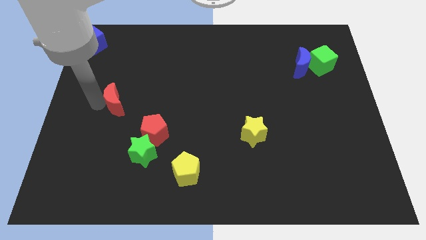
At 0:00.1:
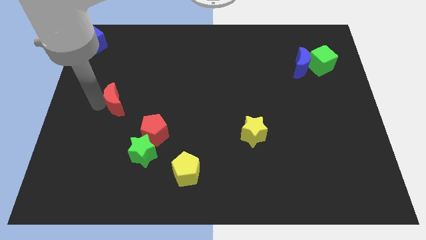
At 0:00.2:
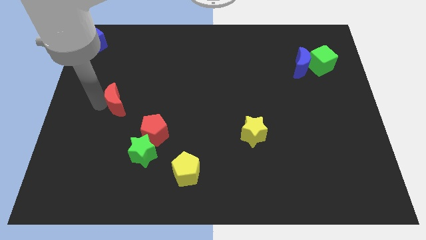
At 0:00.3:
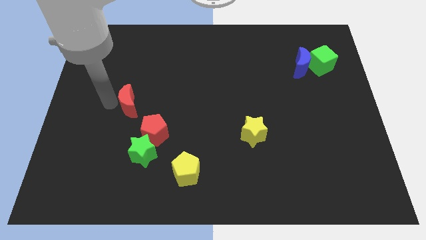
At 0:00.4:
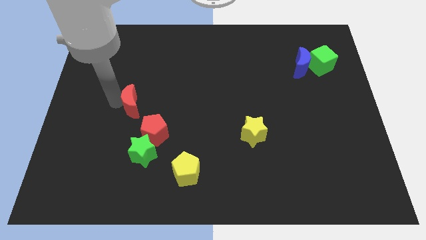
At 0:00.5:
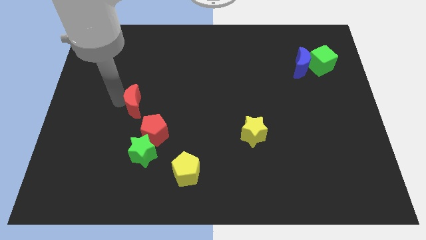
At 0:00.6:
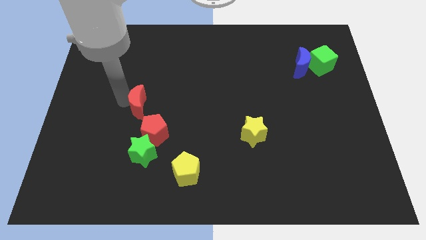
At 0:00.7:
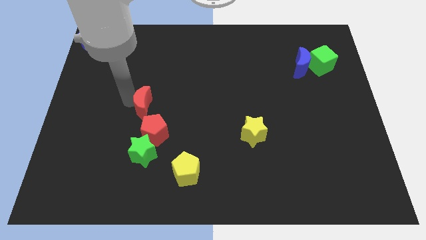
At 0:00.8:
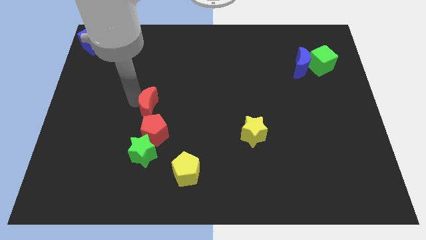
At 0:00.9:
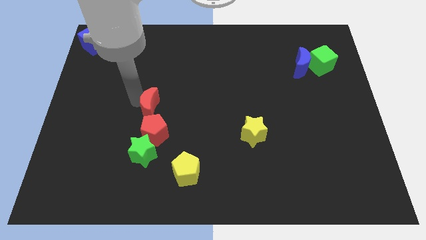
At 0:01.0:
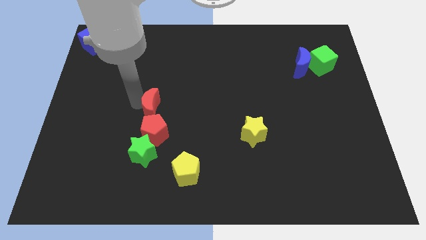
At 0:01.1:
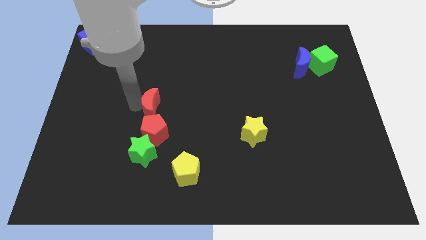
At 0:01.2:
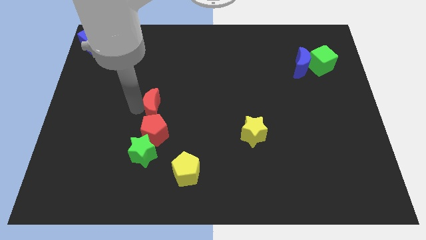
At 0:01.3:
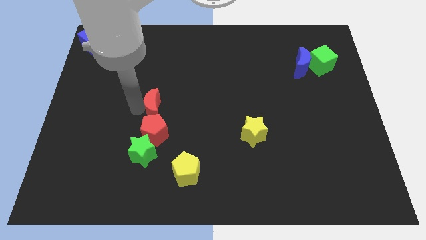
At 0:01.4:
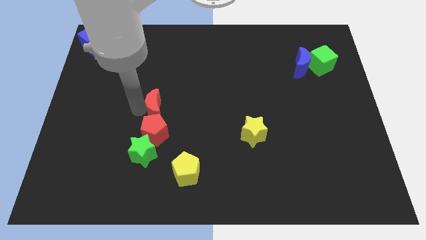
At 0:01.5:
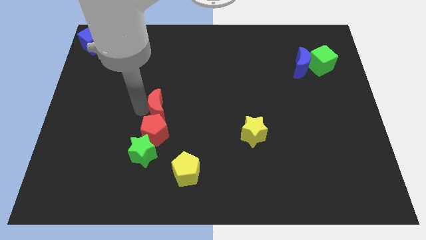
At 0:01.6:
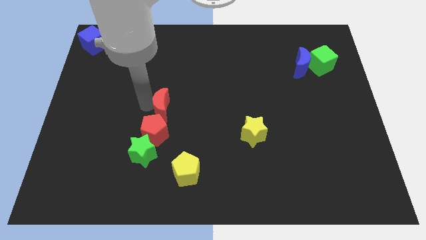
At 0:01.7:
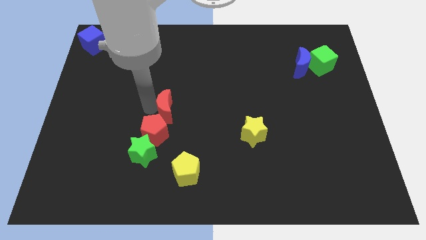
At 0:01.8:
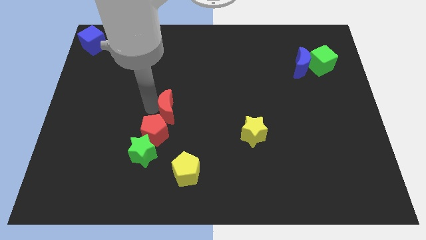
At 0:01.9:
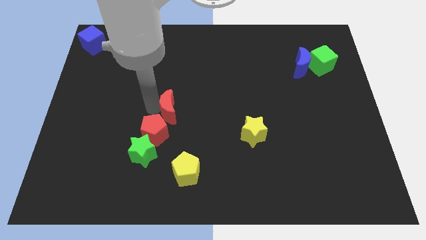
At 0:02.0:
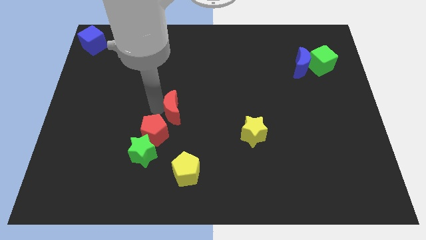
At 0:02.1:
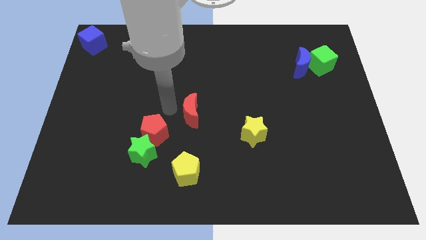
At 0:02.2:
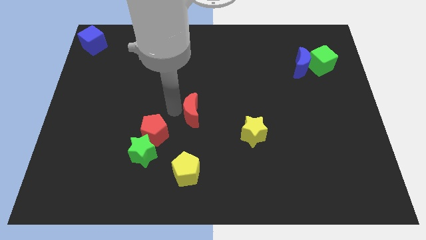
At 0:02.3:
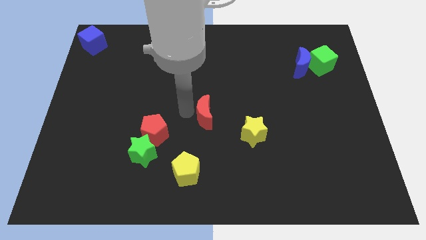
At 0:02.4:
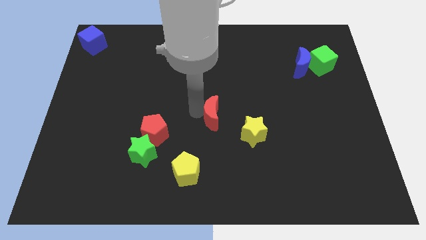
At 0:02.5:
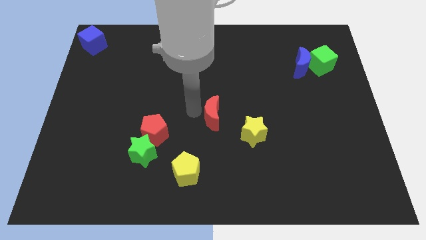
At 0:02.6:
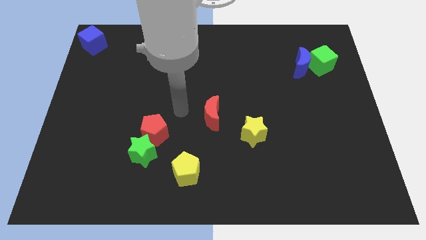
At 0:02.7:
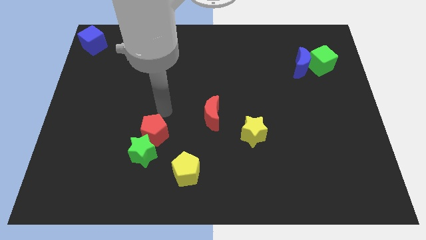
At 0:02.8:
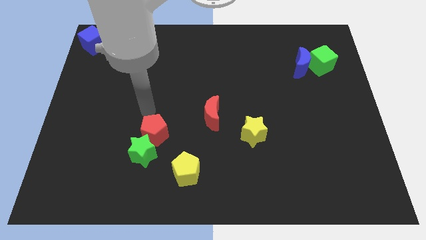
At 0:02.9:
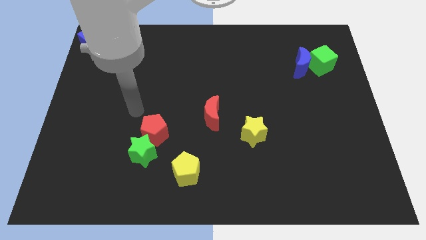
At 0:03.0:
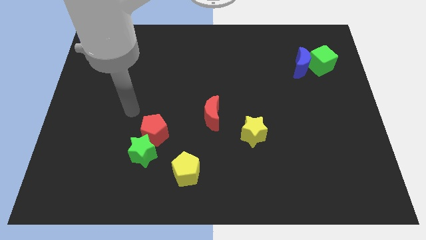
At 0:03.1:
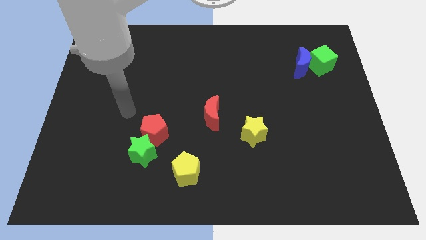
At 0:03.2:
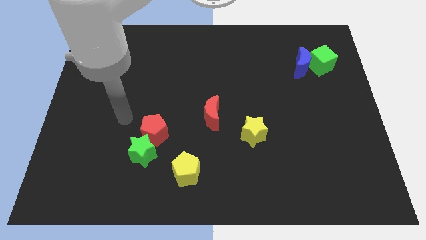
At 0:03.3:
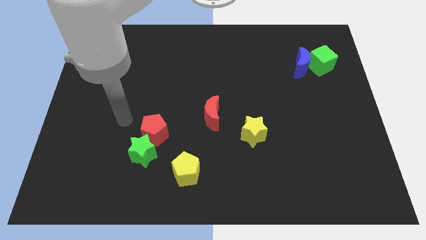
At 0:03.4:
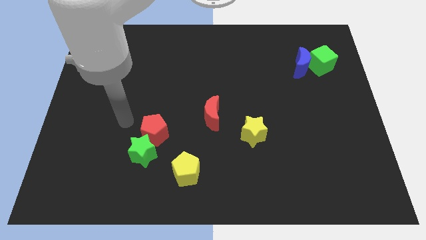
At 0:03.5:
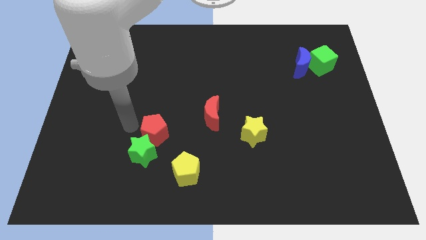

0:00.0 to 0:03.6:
push red crescent beside yellow star

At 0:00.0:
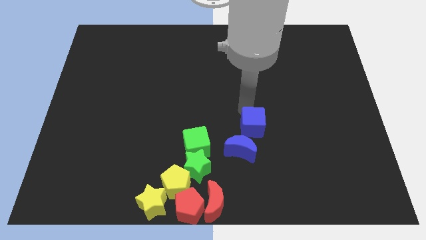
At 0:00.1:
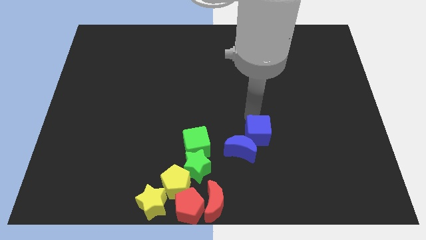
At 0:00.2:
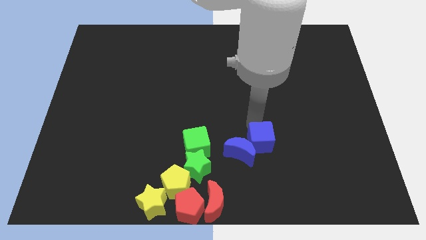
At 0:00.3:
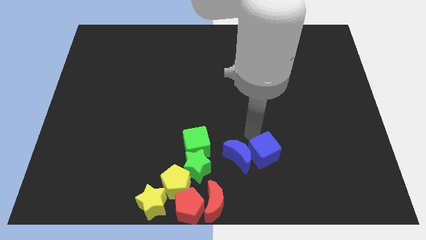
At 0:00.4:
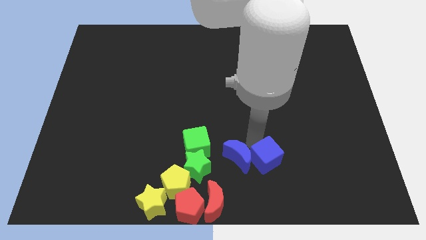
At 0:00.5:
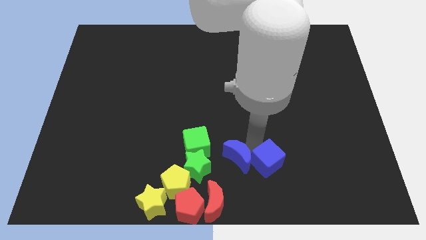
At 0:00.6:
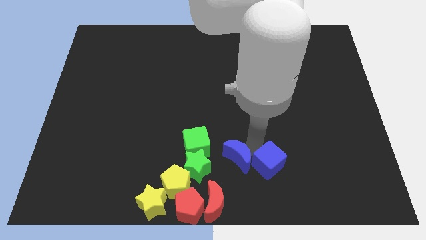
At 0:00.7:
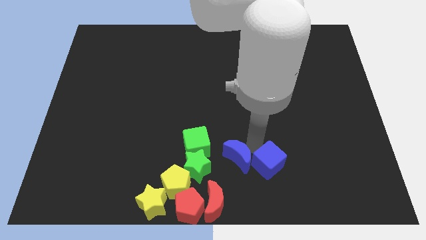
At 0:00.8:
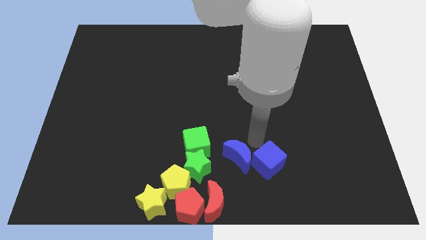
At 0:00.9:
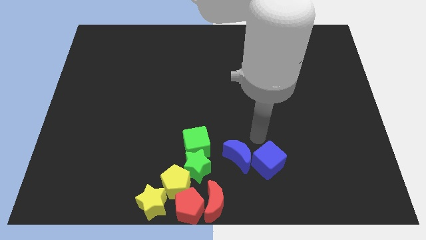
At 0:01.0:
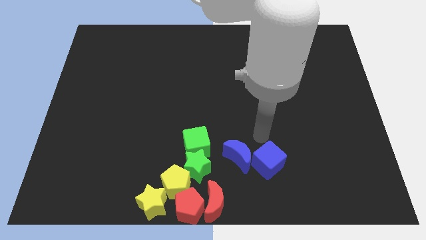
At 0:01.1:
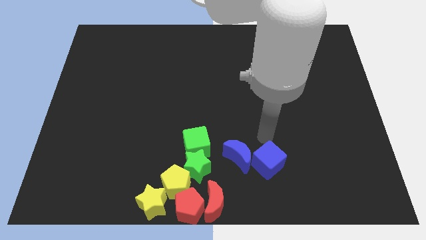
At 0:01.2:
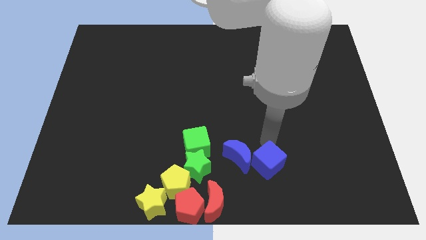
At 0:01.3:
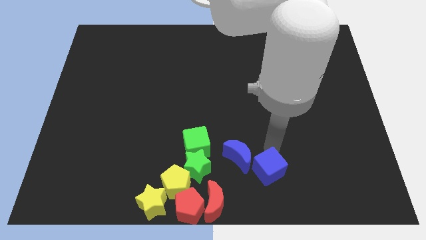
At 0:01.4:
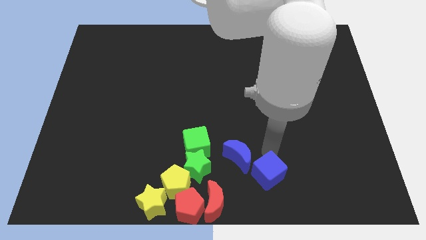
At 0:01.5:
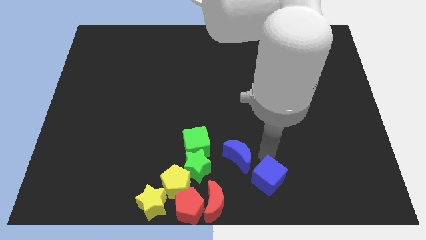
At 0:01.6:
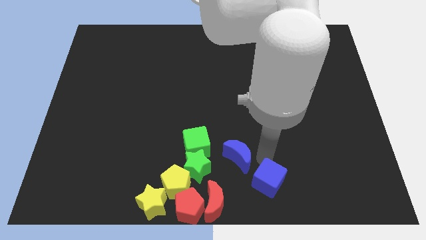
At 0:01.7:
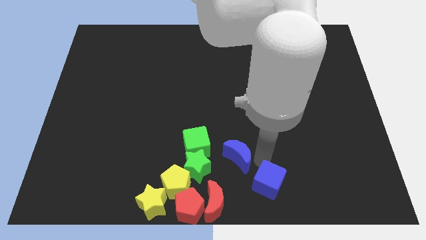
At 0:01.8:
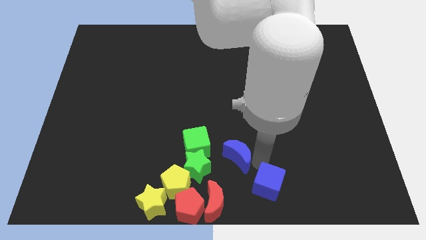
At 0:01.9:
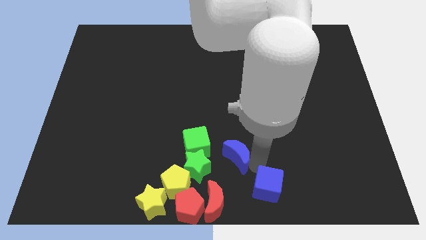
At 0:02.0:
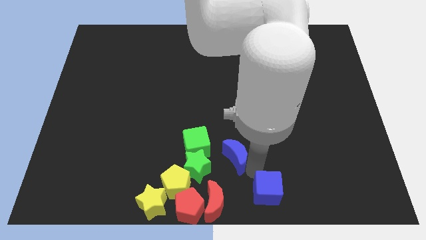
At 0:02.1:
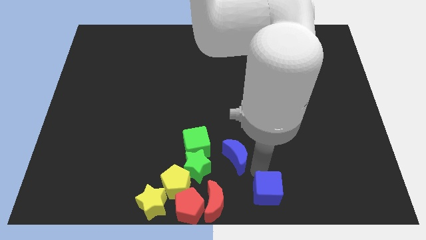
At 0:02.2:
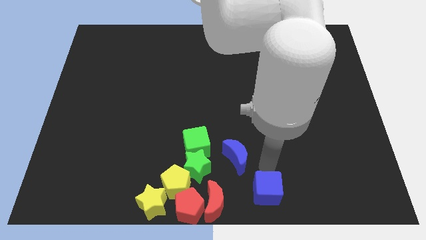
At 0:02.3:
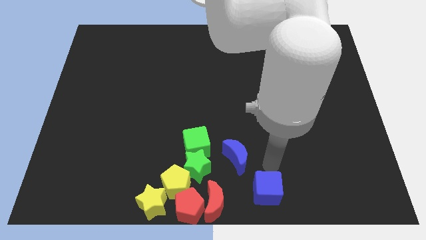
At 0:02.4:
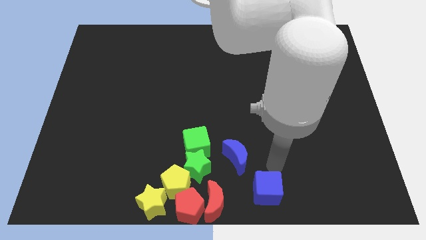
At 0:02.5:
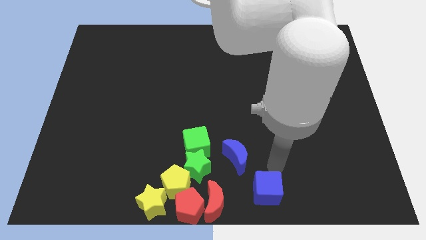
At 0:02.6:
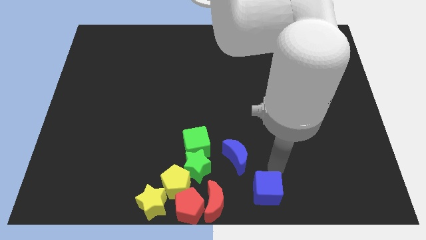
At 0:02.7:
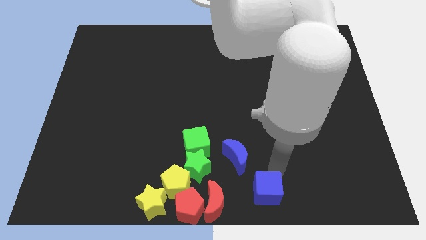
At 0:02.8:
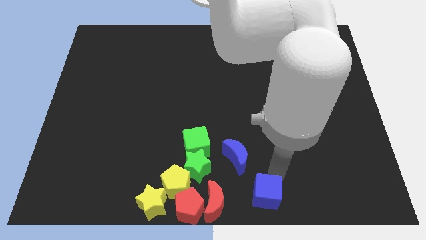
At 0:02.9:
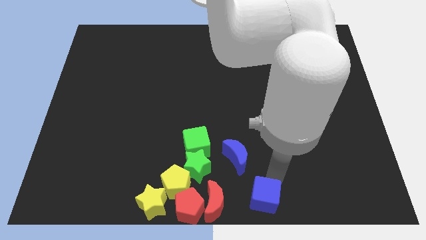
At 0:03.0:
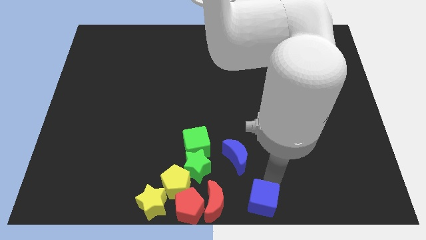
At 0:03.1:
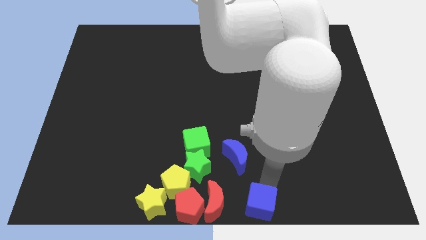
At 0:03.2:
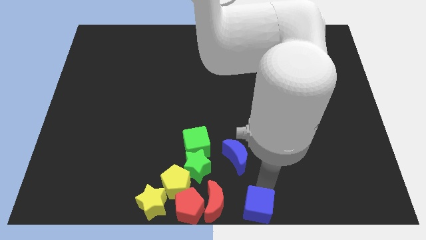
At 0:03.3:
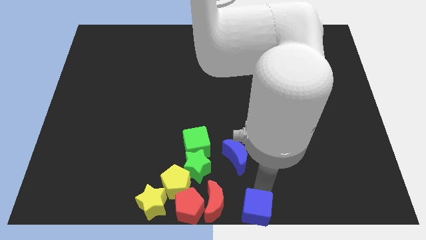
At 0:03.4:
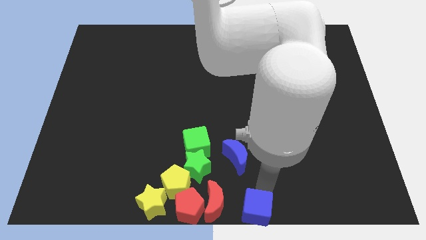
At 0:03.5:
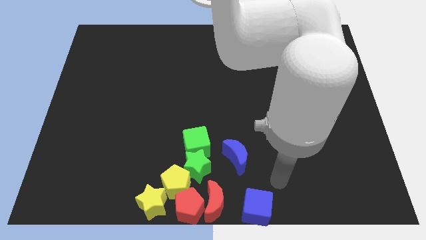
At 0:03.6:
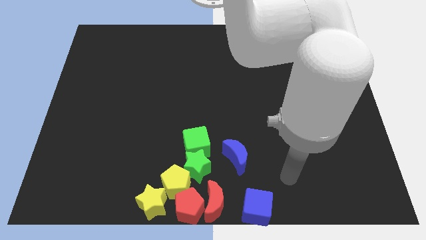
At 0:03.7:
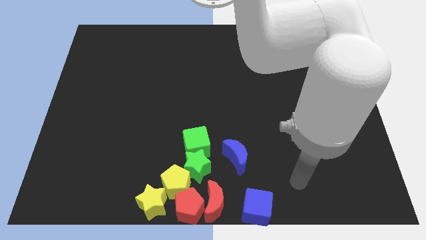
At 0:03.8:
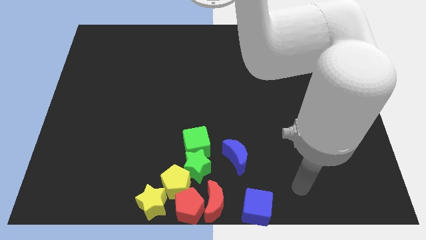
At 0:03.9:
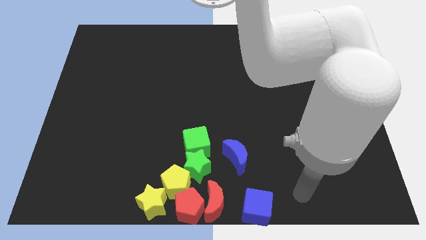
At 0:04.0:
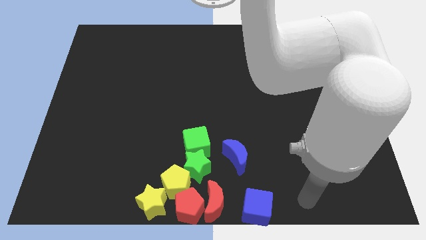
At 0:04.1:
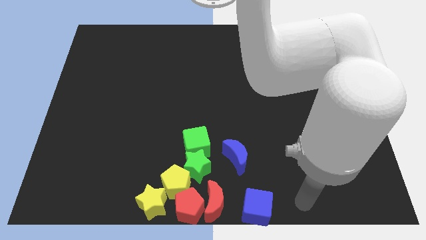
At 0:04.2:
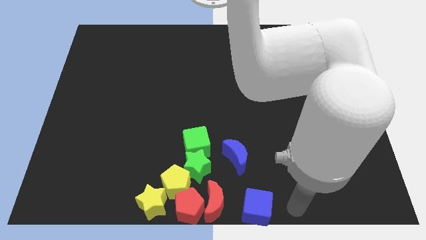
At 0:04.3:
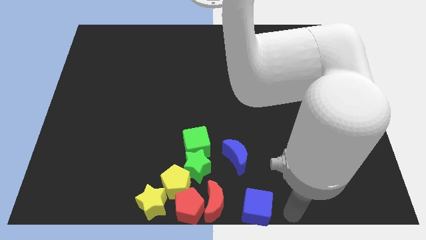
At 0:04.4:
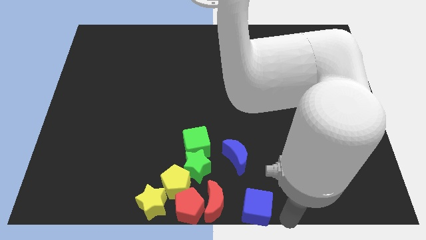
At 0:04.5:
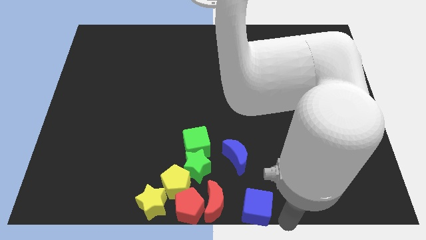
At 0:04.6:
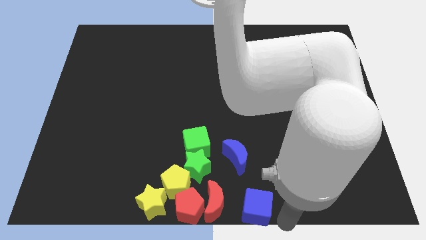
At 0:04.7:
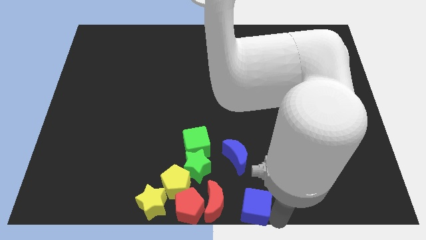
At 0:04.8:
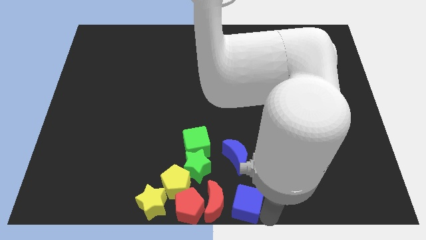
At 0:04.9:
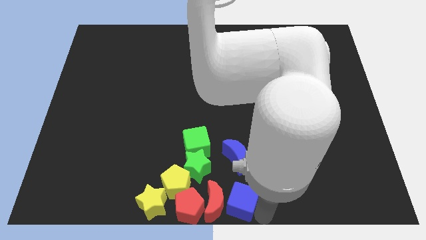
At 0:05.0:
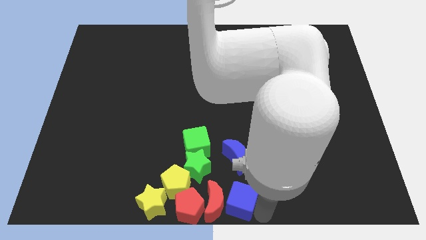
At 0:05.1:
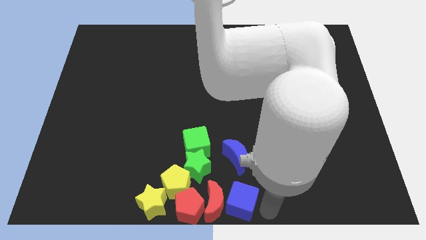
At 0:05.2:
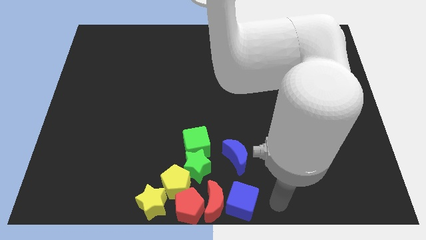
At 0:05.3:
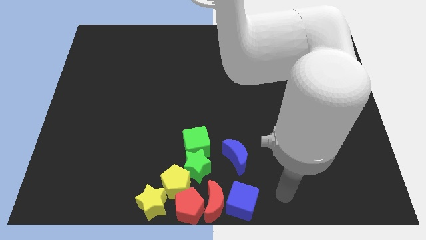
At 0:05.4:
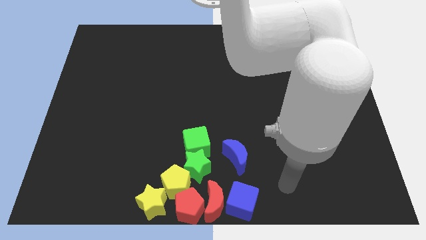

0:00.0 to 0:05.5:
move blue cube right beside the red moon
